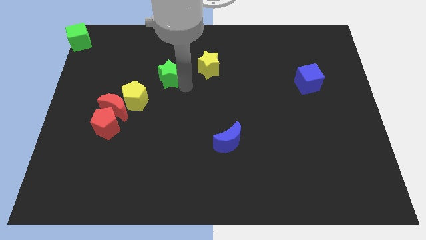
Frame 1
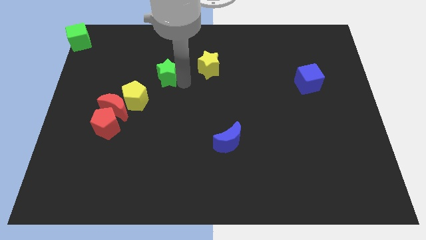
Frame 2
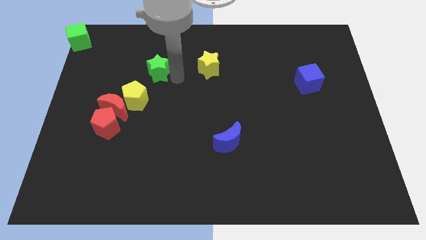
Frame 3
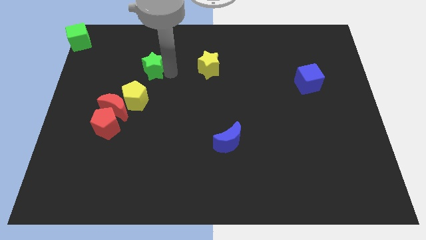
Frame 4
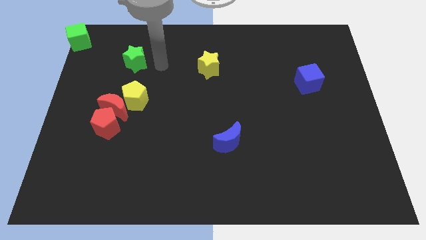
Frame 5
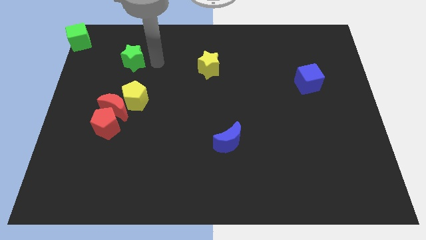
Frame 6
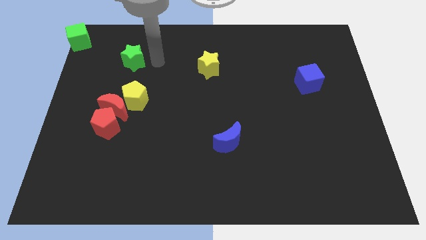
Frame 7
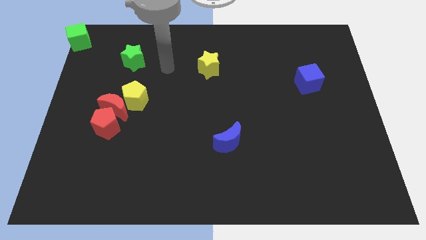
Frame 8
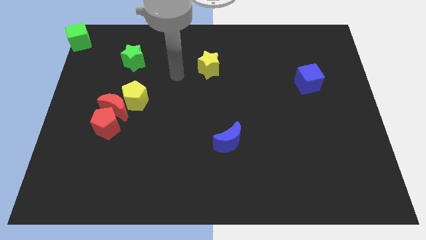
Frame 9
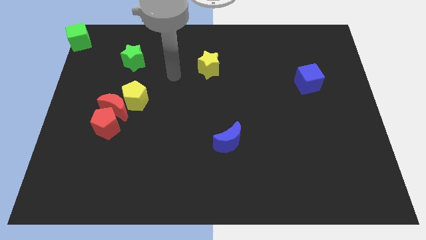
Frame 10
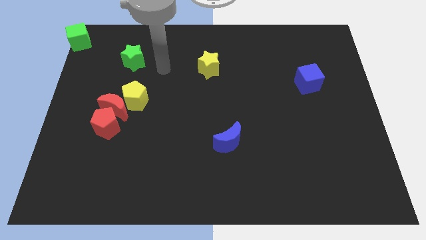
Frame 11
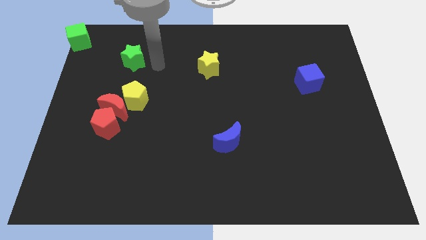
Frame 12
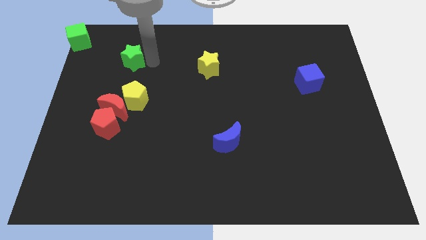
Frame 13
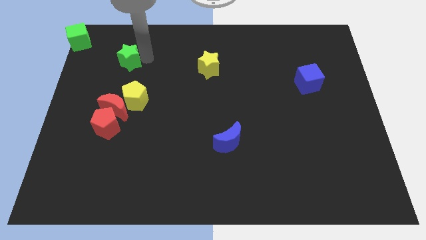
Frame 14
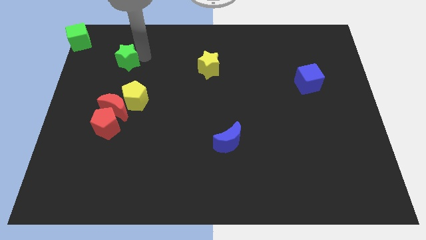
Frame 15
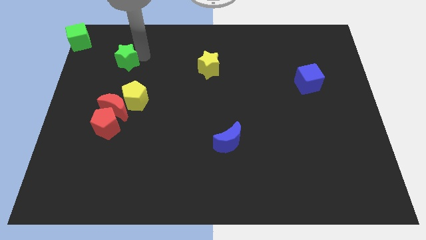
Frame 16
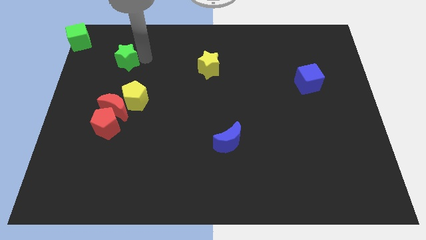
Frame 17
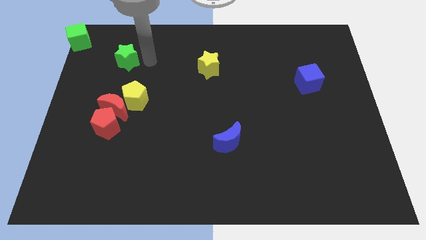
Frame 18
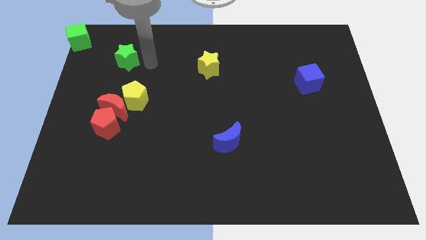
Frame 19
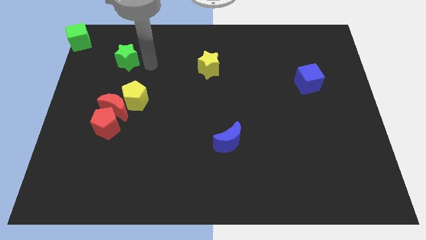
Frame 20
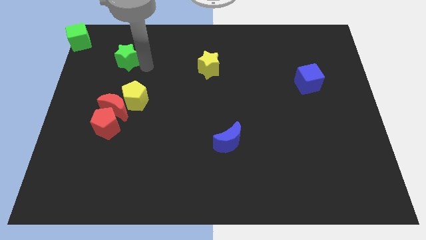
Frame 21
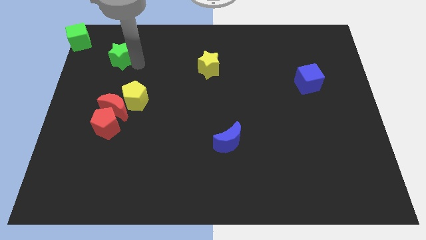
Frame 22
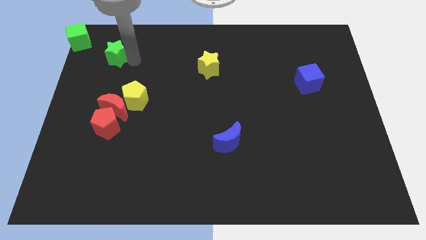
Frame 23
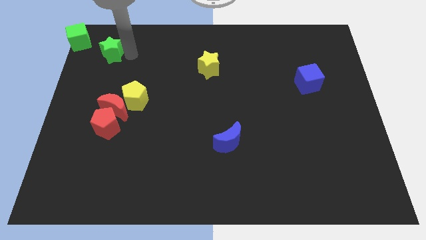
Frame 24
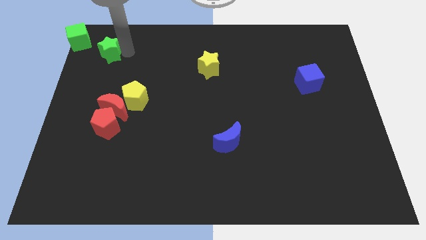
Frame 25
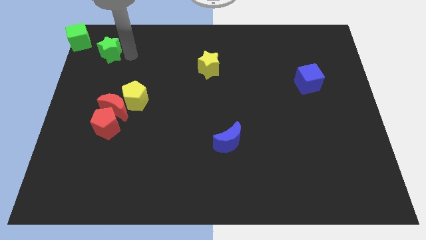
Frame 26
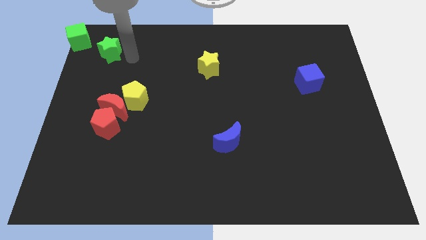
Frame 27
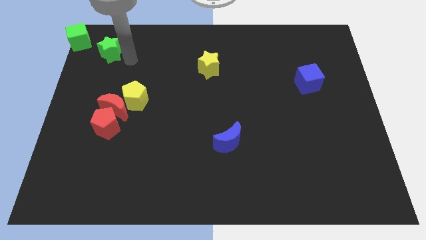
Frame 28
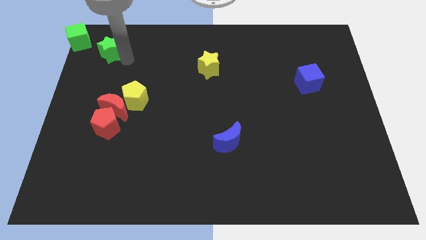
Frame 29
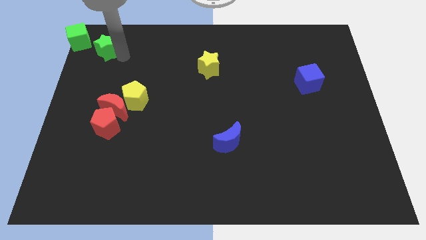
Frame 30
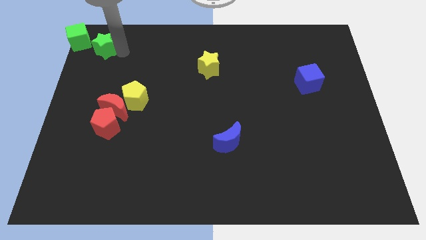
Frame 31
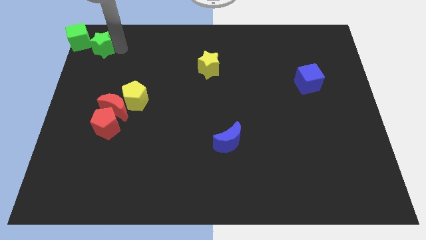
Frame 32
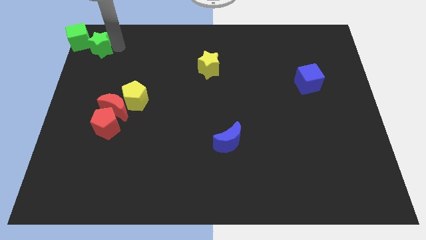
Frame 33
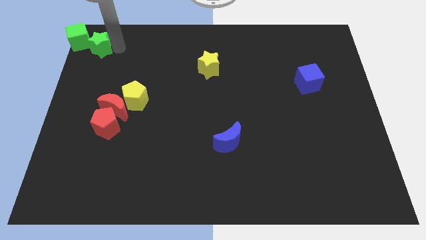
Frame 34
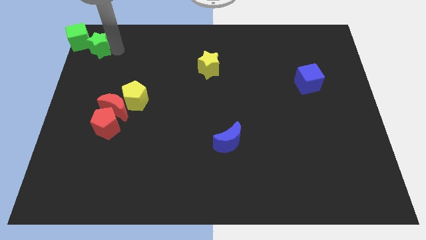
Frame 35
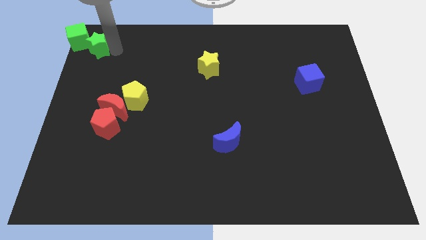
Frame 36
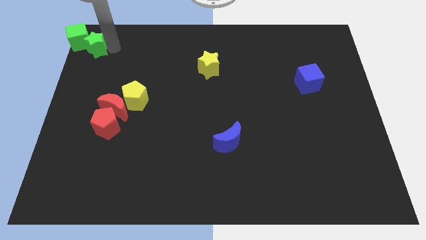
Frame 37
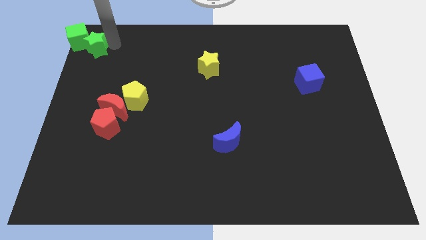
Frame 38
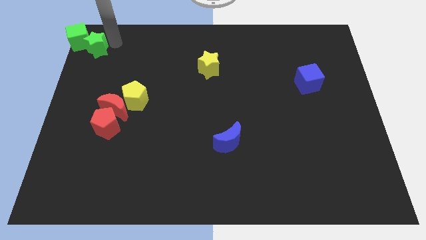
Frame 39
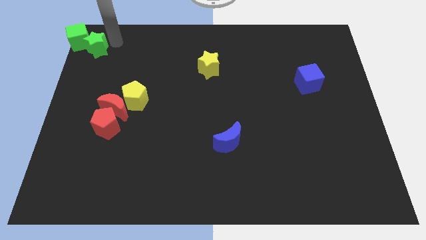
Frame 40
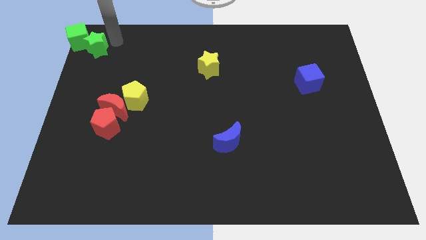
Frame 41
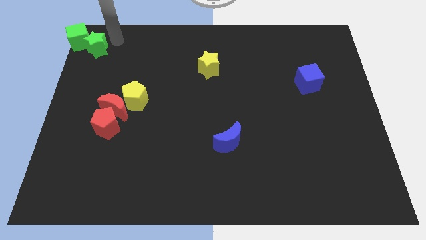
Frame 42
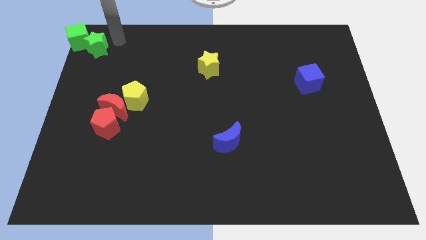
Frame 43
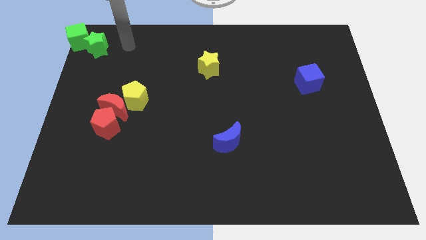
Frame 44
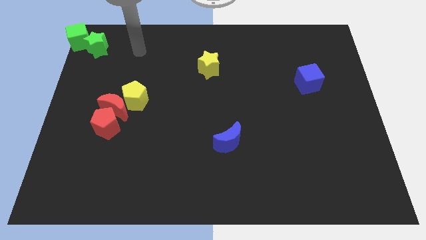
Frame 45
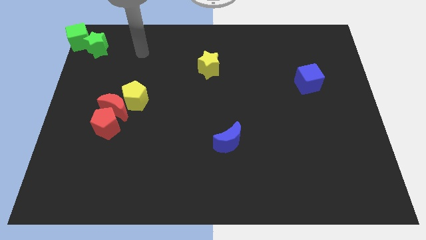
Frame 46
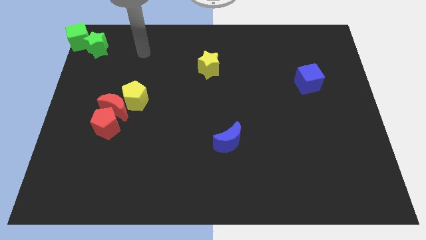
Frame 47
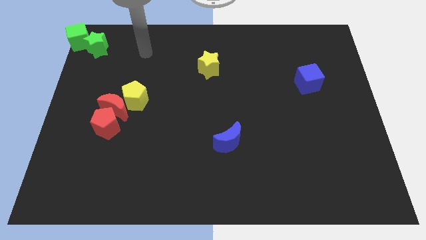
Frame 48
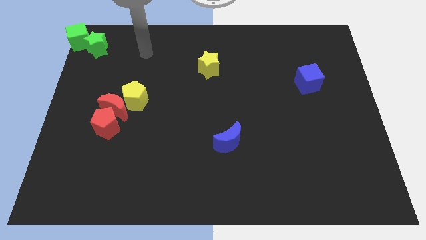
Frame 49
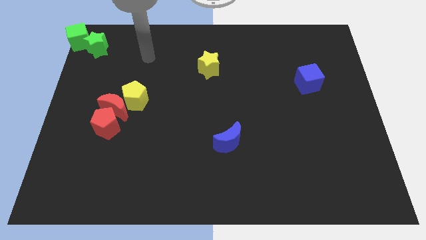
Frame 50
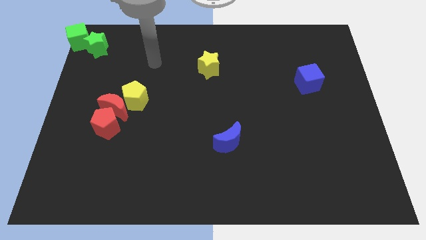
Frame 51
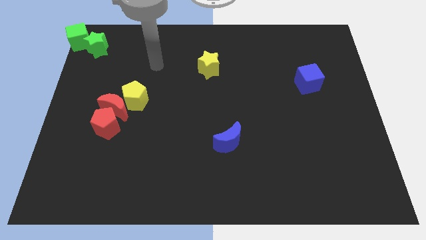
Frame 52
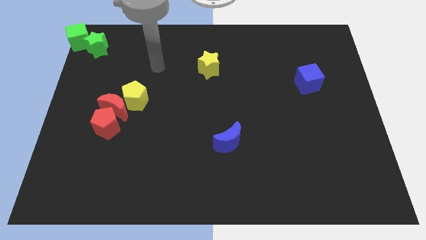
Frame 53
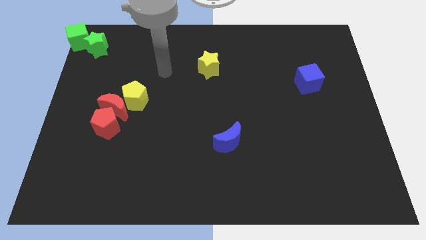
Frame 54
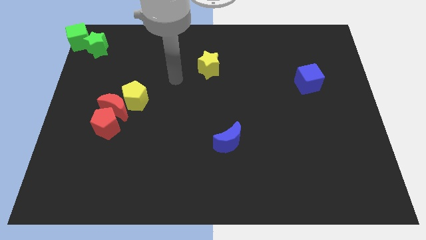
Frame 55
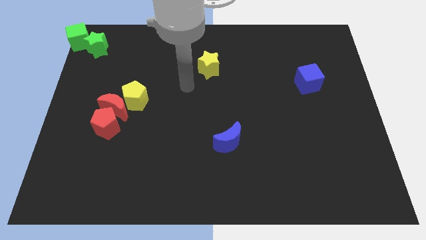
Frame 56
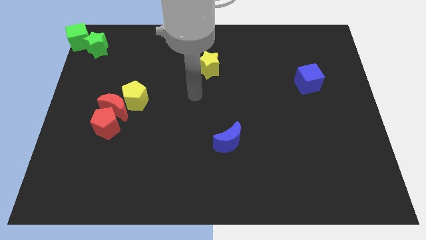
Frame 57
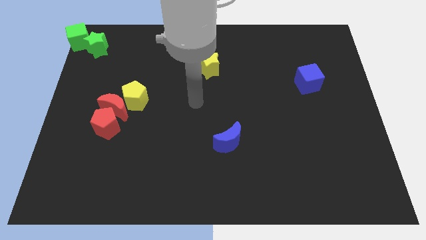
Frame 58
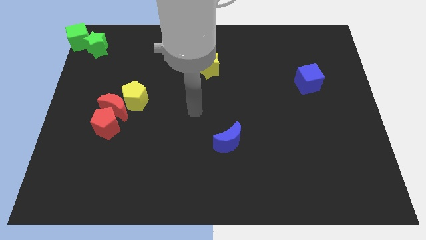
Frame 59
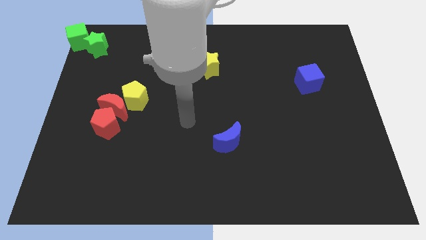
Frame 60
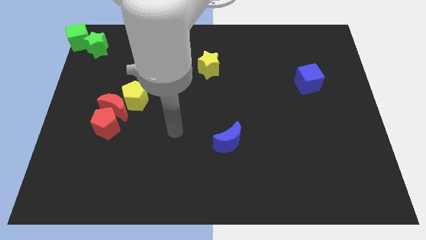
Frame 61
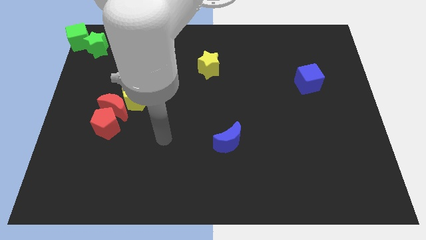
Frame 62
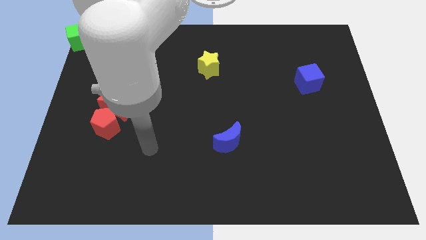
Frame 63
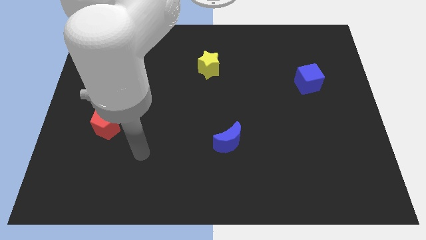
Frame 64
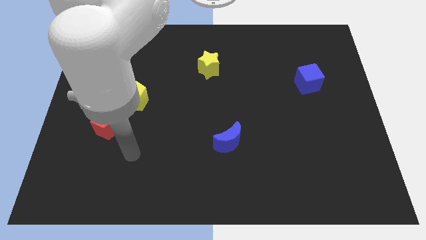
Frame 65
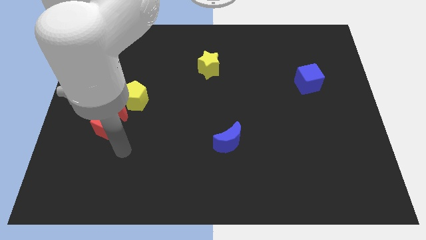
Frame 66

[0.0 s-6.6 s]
place the green star bottom right to the green cube

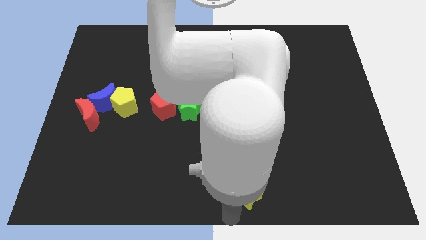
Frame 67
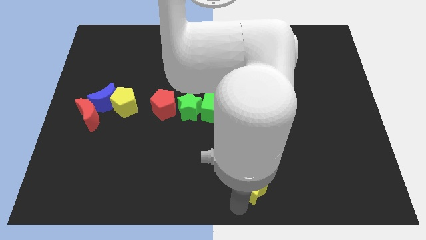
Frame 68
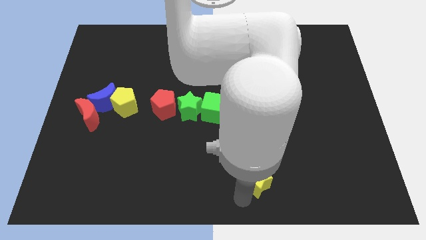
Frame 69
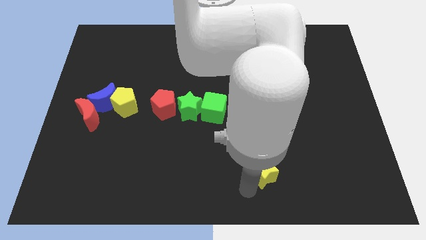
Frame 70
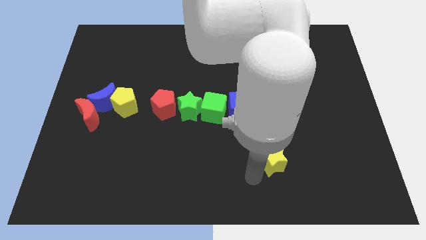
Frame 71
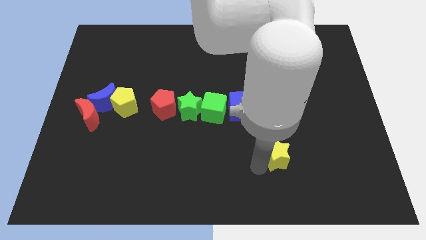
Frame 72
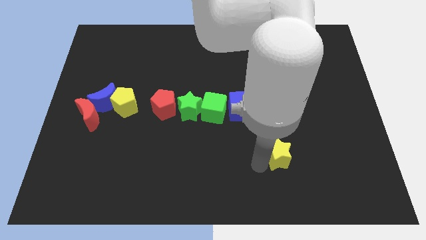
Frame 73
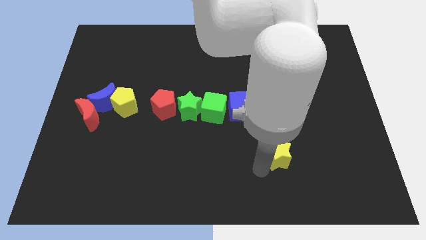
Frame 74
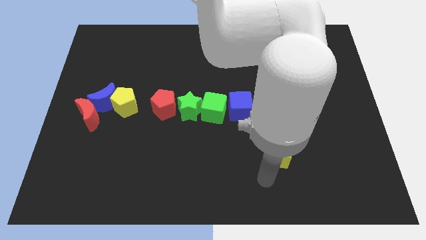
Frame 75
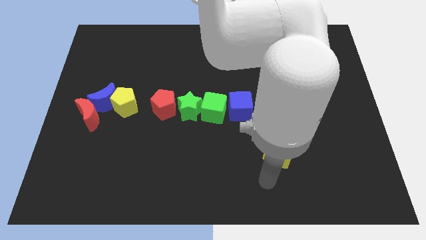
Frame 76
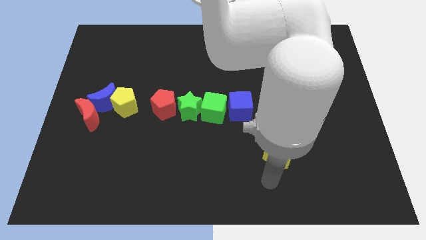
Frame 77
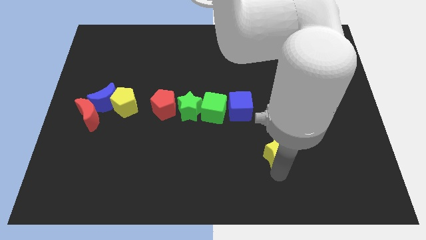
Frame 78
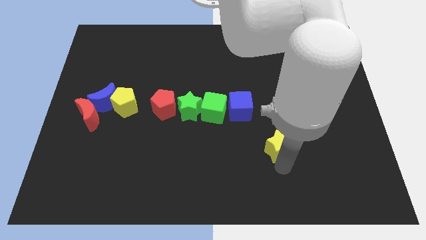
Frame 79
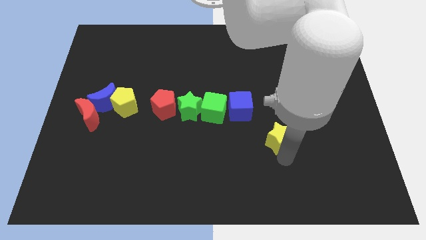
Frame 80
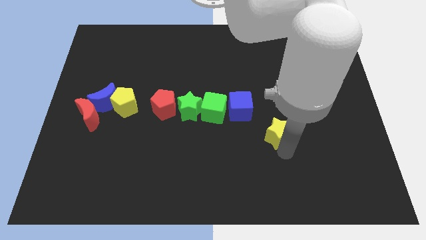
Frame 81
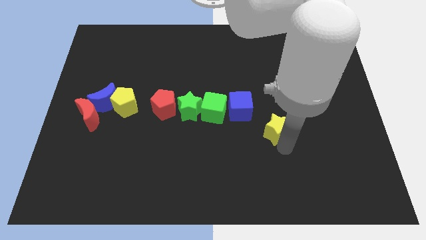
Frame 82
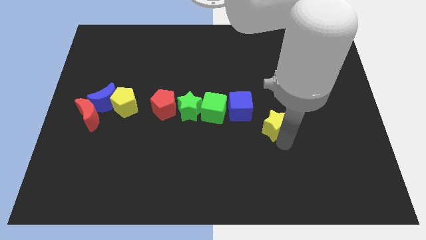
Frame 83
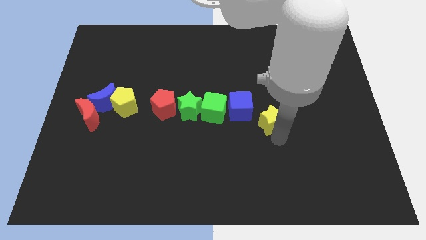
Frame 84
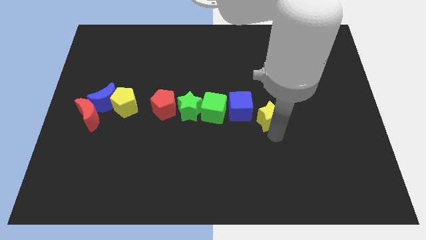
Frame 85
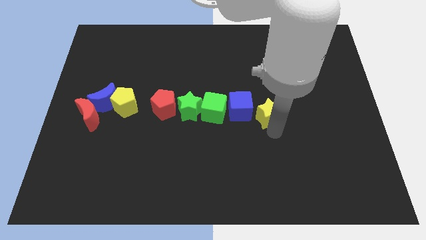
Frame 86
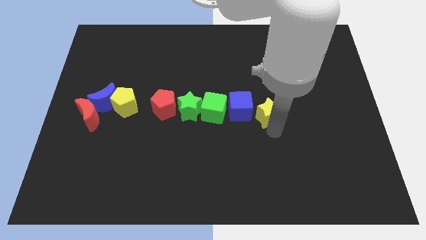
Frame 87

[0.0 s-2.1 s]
push the yellow star to the right of the blue cube

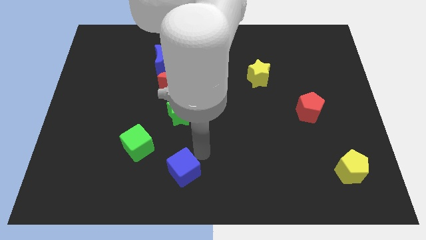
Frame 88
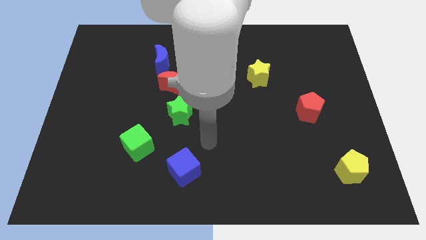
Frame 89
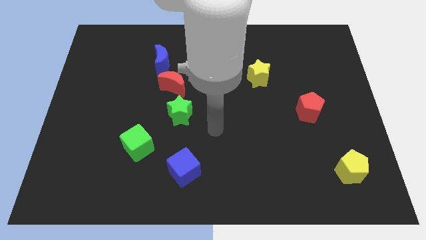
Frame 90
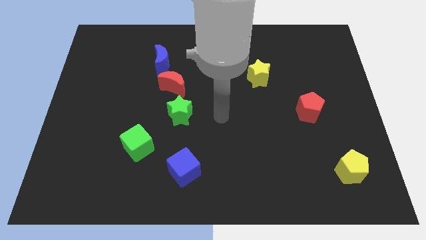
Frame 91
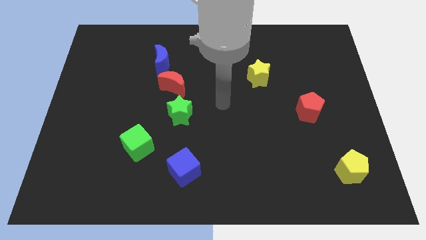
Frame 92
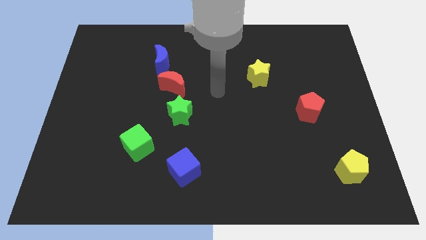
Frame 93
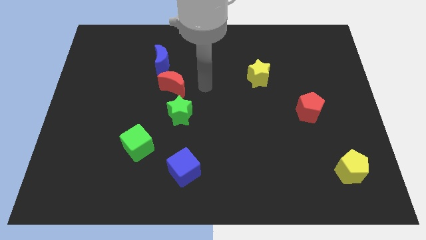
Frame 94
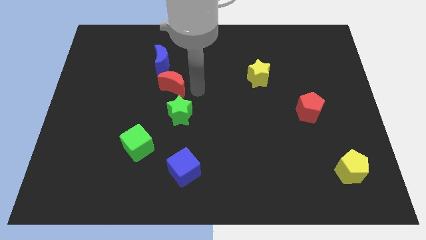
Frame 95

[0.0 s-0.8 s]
move your arm right to the red crescent
